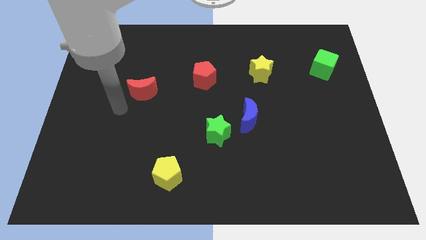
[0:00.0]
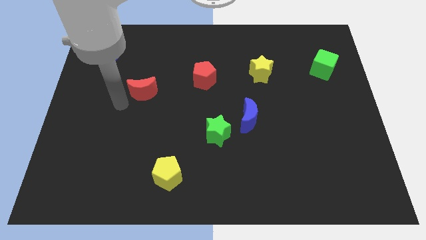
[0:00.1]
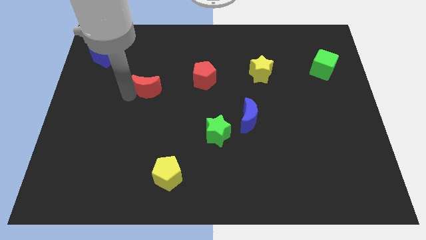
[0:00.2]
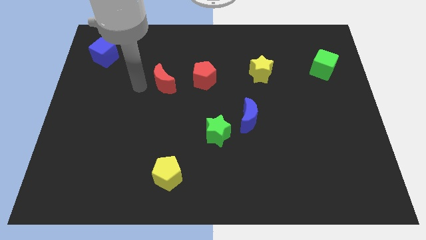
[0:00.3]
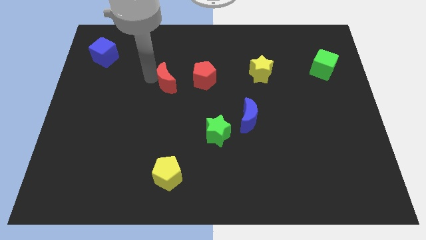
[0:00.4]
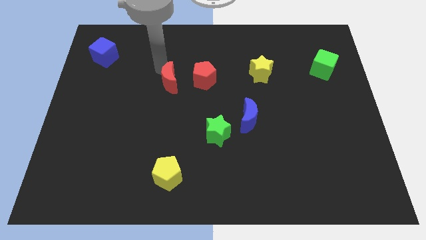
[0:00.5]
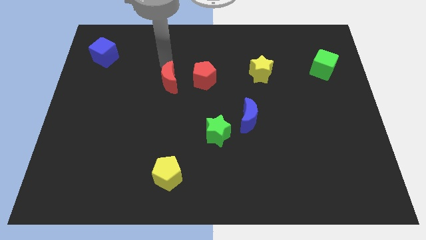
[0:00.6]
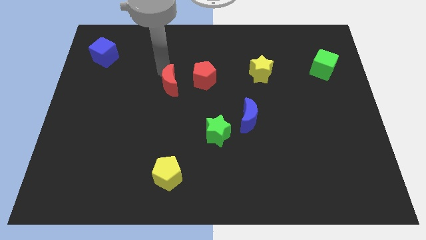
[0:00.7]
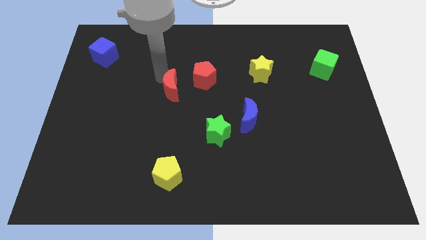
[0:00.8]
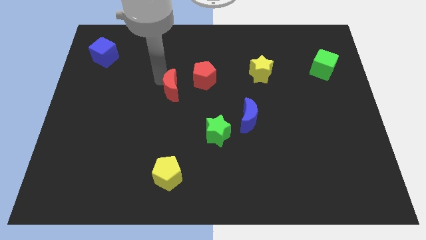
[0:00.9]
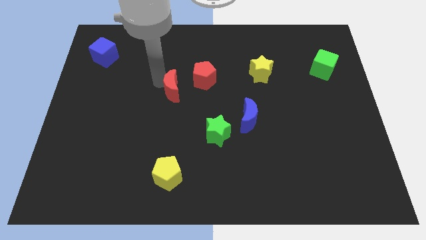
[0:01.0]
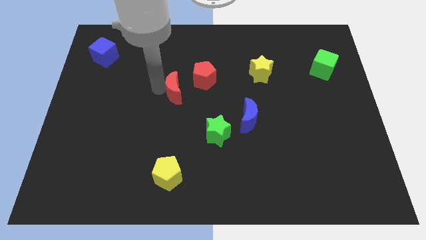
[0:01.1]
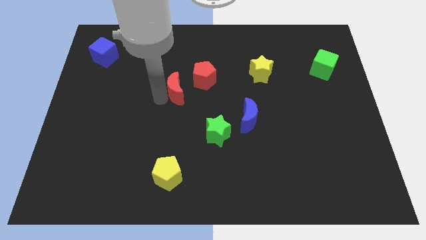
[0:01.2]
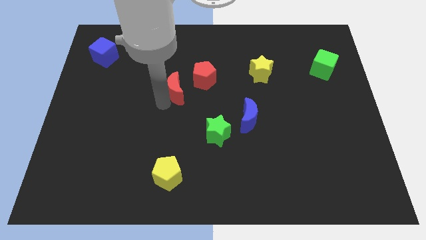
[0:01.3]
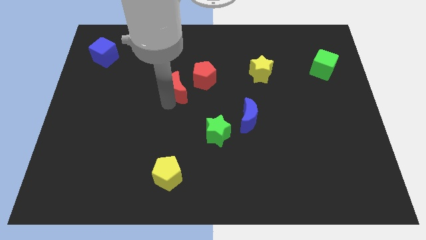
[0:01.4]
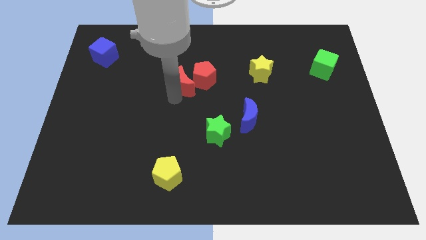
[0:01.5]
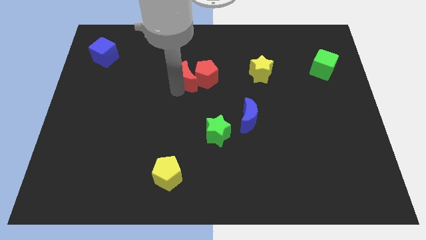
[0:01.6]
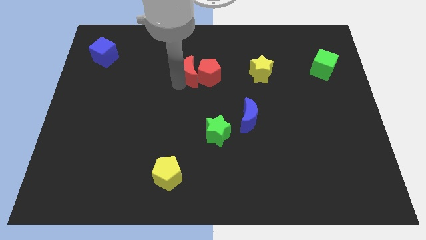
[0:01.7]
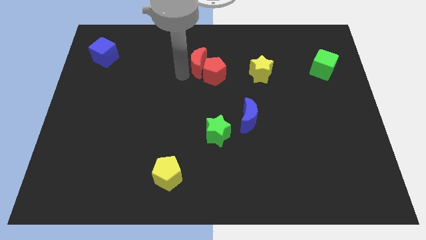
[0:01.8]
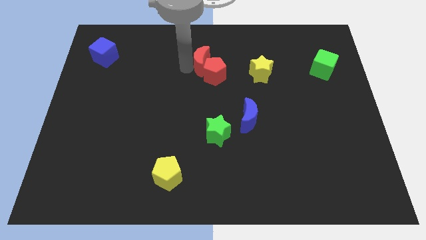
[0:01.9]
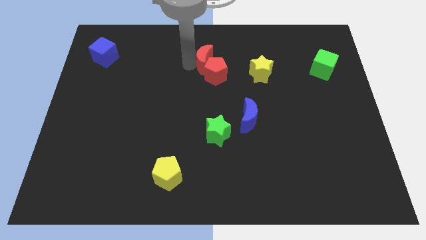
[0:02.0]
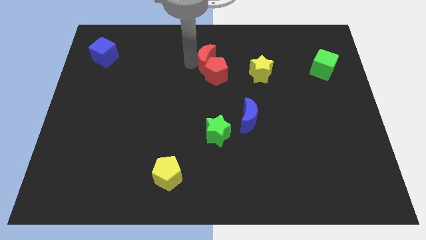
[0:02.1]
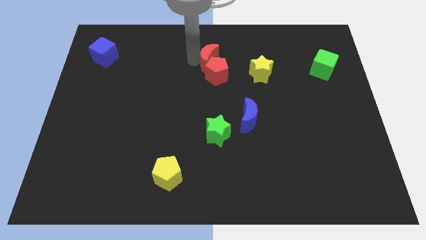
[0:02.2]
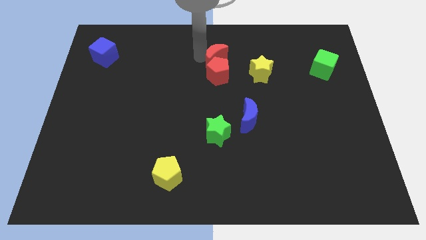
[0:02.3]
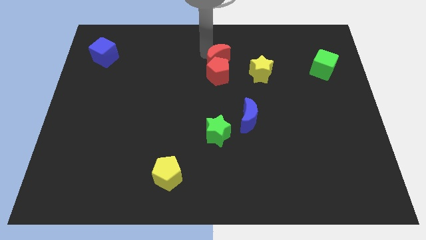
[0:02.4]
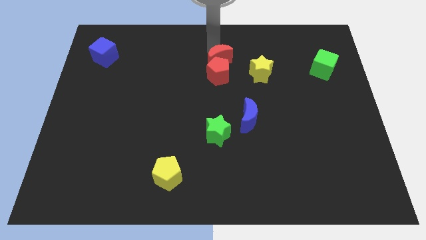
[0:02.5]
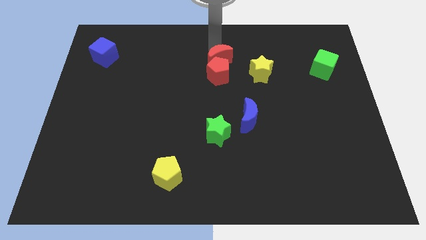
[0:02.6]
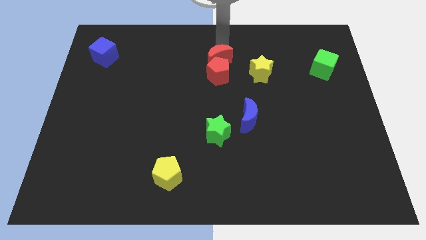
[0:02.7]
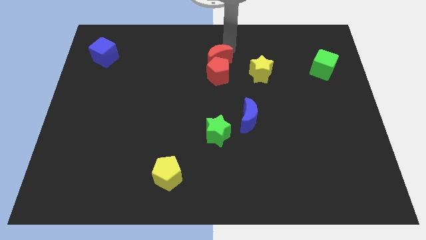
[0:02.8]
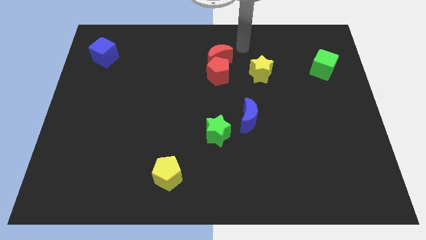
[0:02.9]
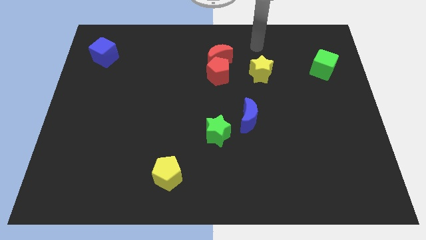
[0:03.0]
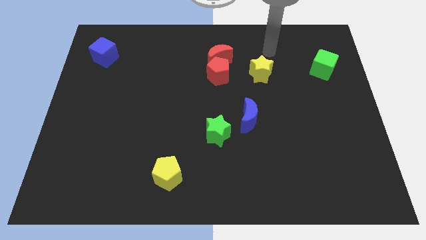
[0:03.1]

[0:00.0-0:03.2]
push the red moon into the red pentagon

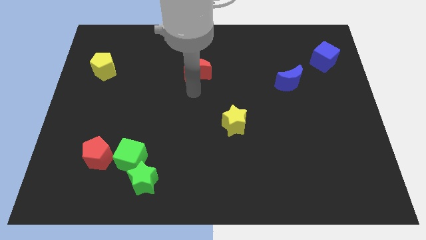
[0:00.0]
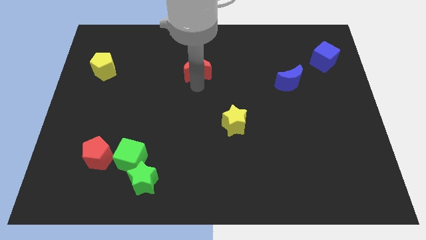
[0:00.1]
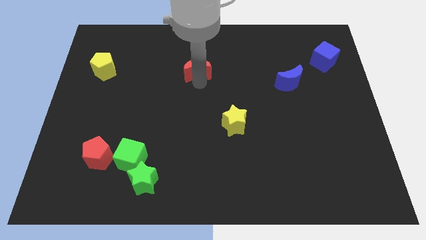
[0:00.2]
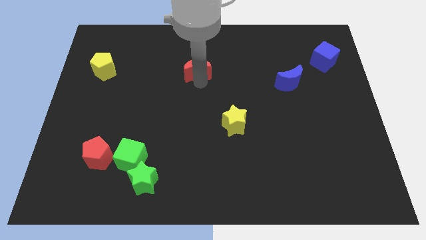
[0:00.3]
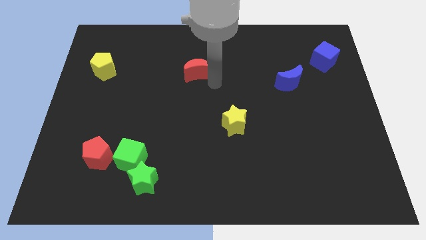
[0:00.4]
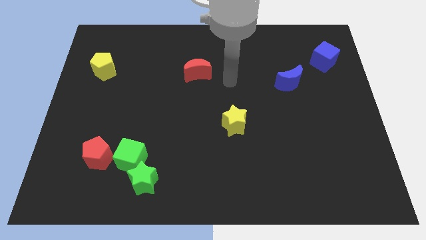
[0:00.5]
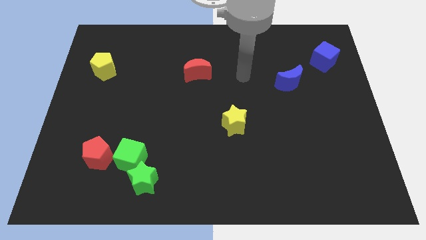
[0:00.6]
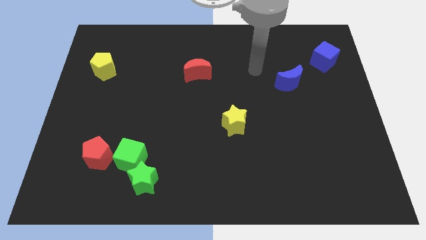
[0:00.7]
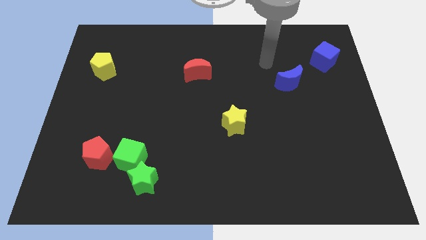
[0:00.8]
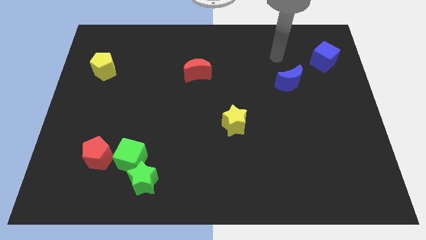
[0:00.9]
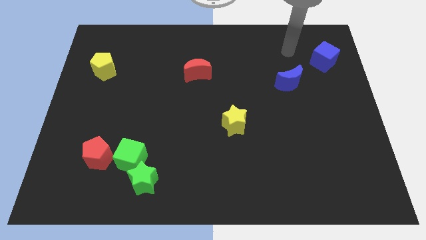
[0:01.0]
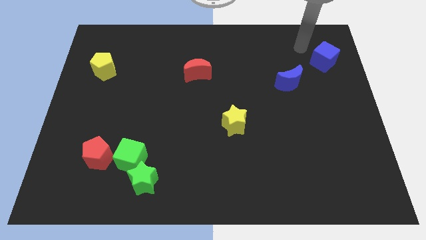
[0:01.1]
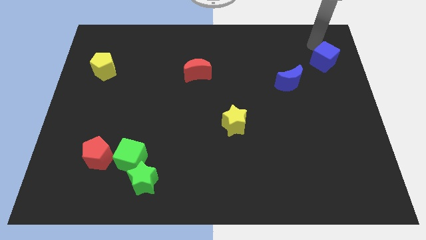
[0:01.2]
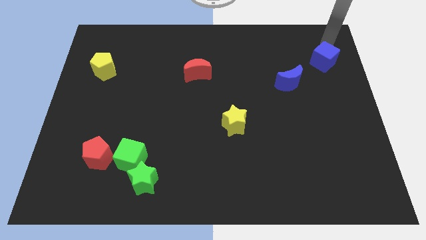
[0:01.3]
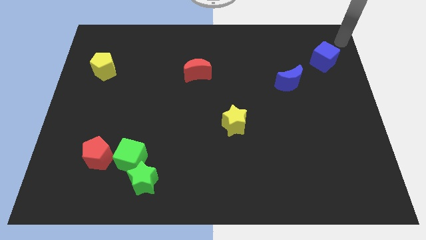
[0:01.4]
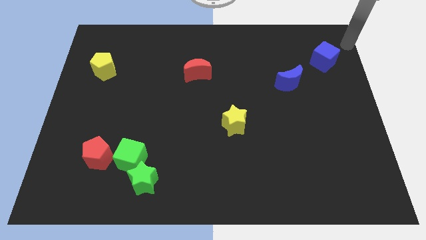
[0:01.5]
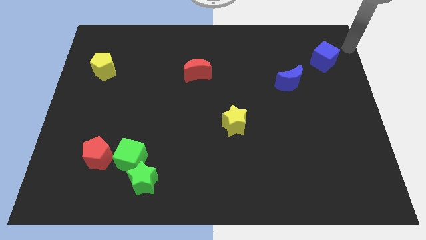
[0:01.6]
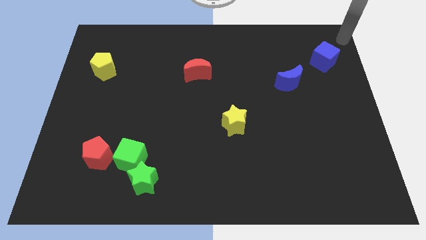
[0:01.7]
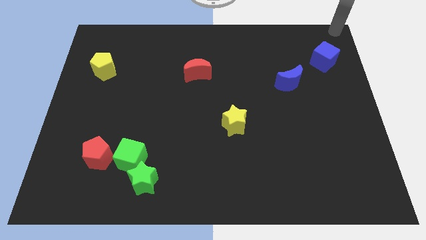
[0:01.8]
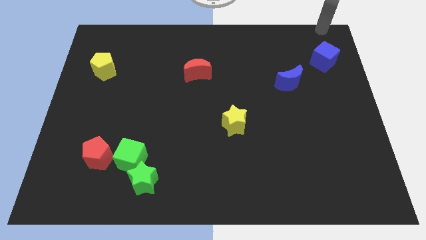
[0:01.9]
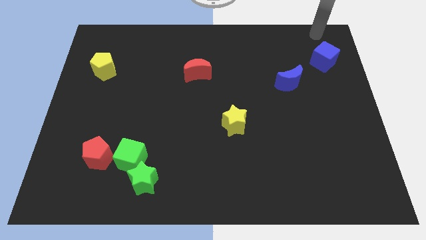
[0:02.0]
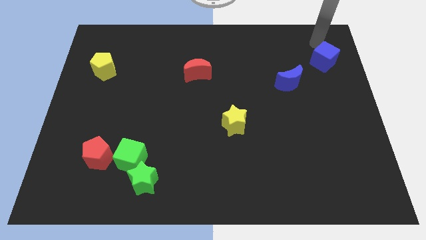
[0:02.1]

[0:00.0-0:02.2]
place your arm on top of blue cube

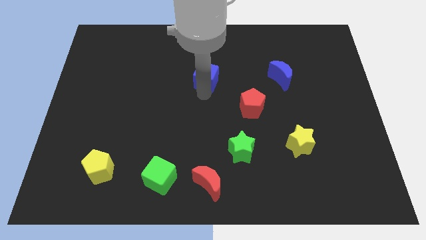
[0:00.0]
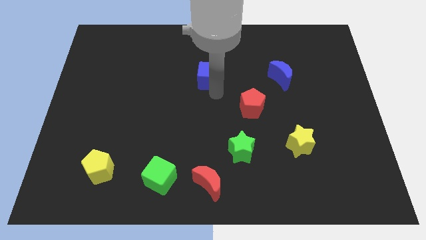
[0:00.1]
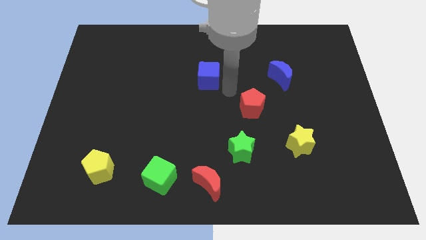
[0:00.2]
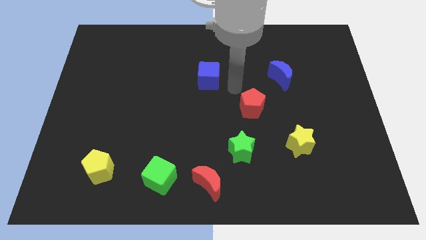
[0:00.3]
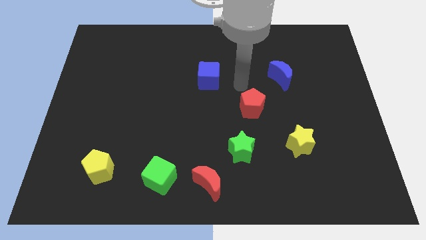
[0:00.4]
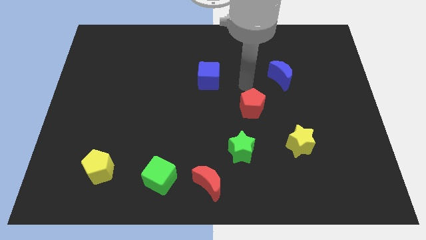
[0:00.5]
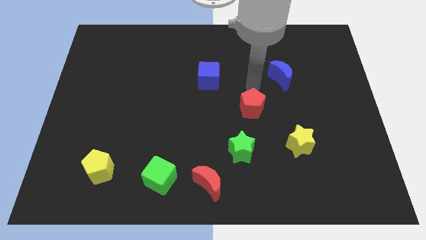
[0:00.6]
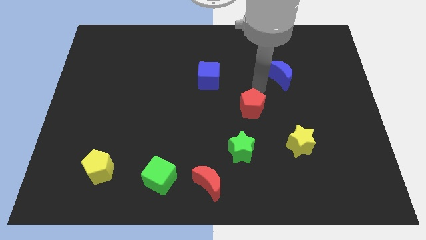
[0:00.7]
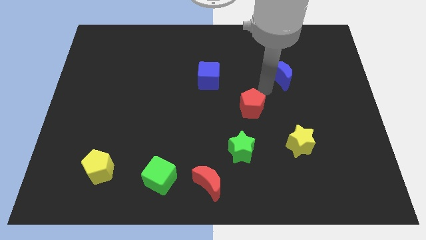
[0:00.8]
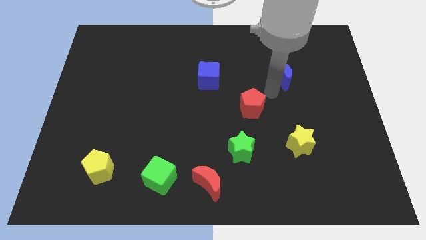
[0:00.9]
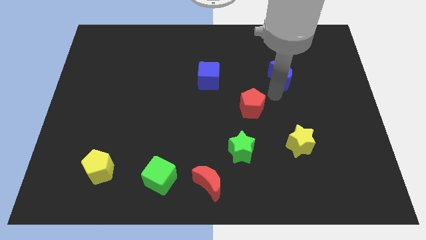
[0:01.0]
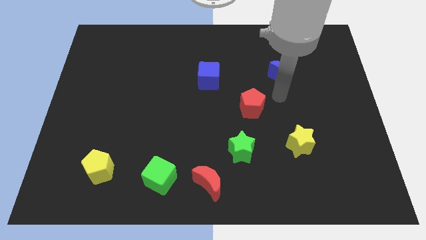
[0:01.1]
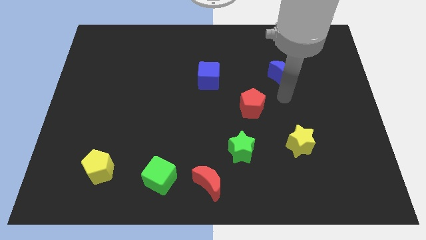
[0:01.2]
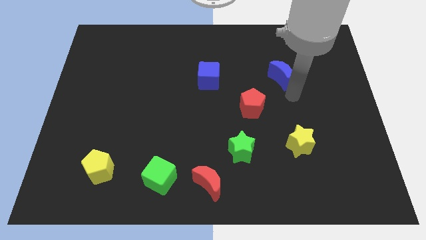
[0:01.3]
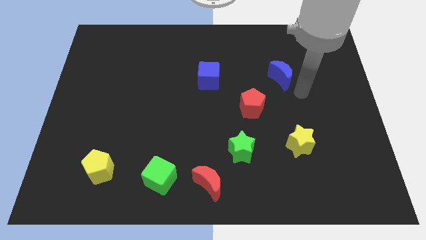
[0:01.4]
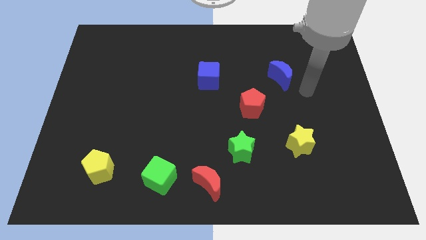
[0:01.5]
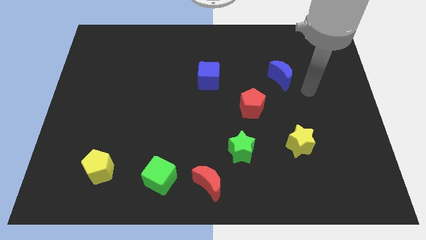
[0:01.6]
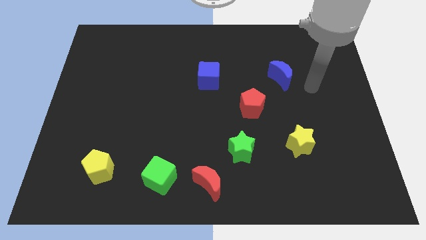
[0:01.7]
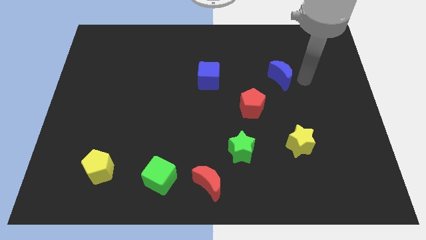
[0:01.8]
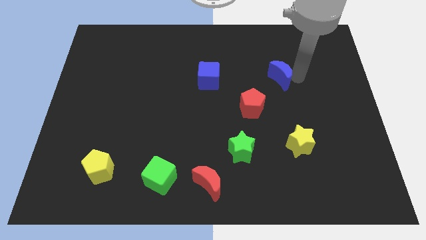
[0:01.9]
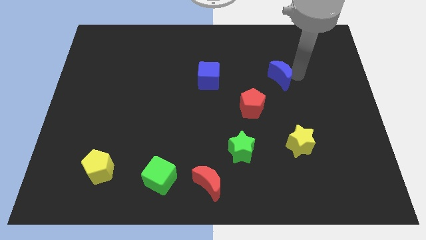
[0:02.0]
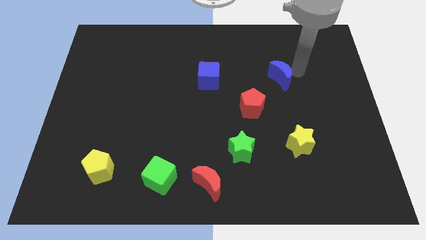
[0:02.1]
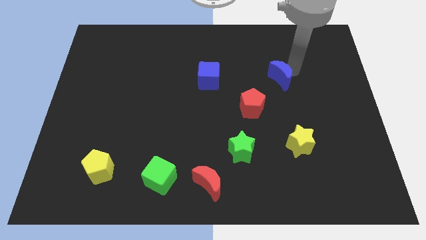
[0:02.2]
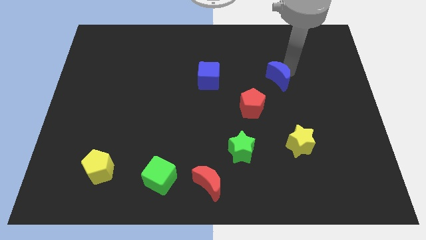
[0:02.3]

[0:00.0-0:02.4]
slightly push the blue crescent to left side

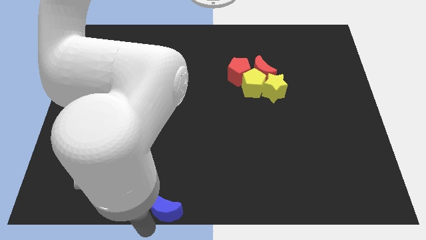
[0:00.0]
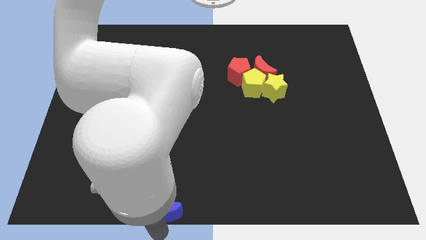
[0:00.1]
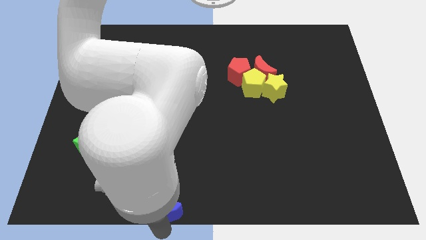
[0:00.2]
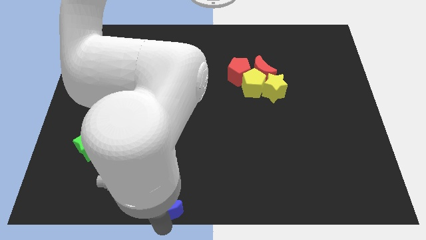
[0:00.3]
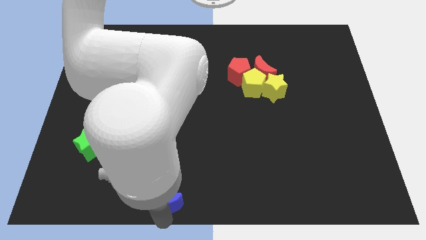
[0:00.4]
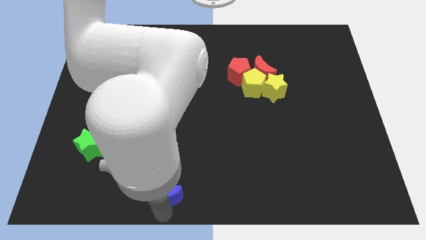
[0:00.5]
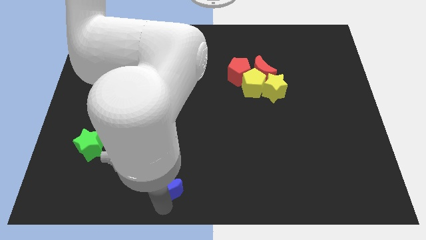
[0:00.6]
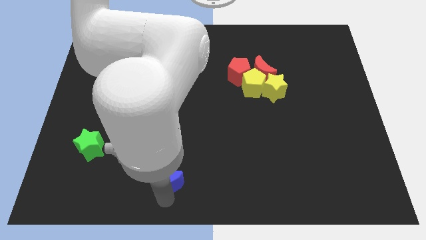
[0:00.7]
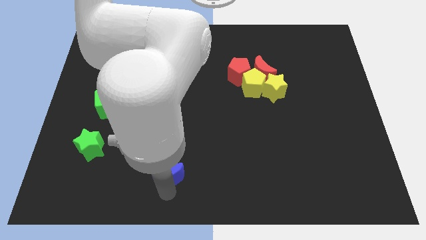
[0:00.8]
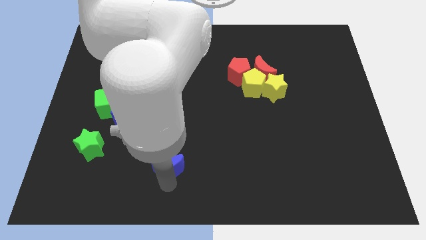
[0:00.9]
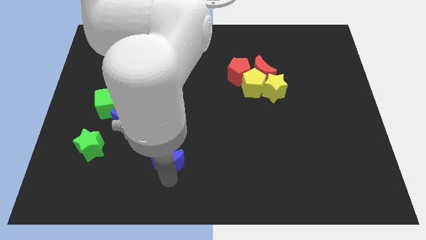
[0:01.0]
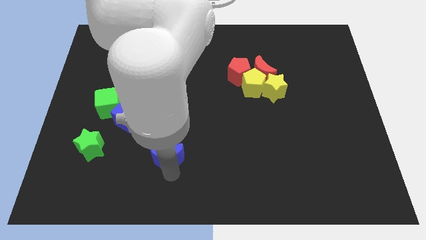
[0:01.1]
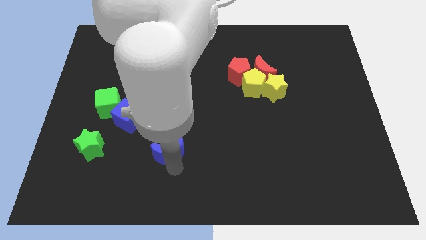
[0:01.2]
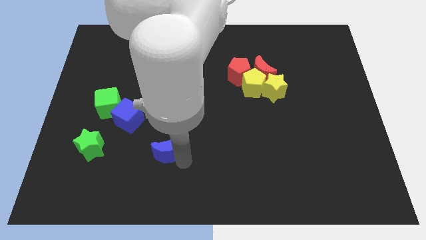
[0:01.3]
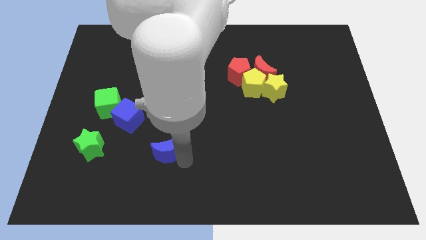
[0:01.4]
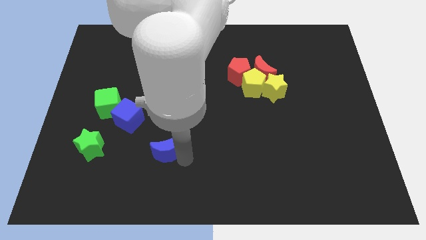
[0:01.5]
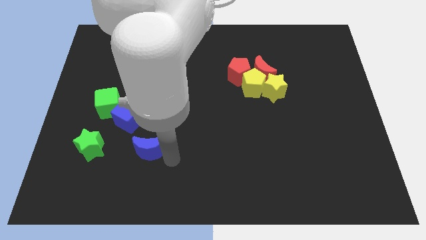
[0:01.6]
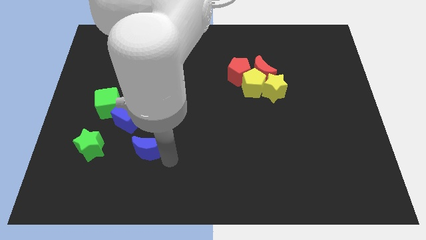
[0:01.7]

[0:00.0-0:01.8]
place the blue moon on the right of the green star
